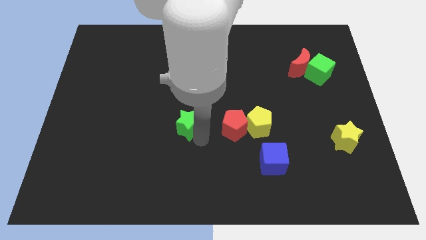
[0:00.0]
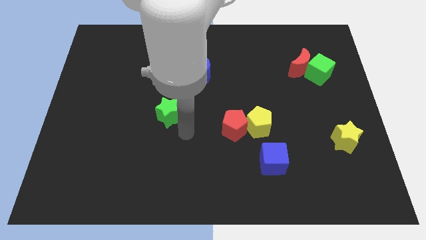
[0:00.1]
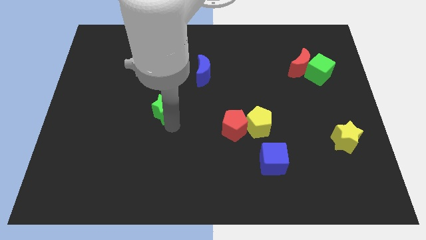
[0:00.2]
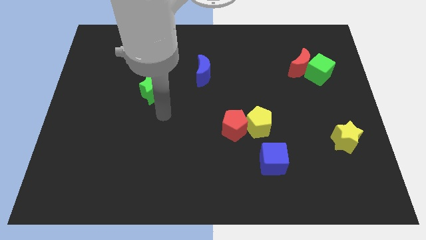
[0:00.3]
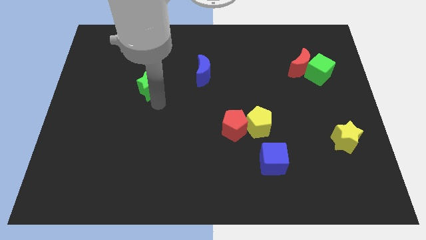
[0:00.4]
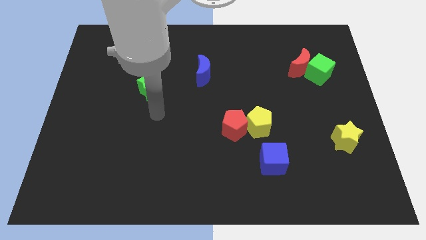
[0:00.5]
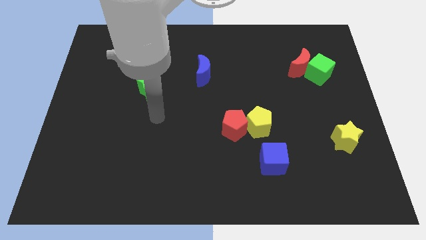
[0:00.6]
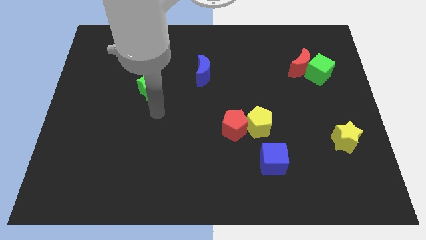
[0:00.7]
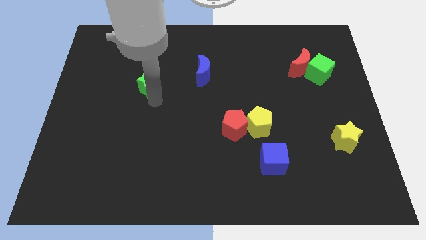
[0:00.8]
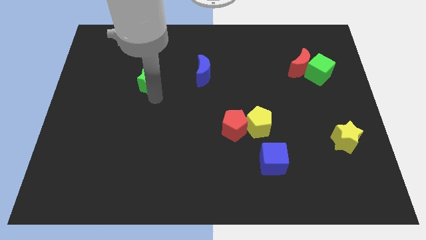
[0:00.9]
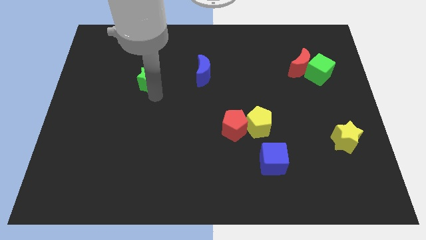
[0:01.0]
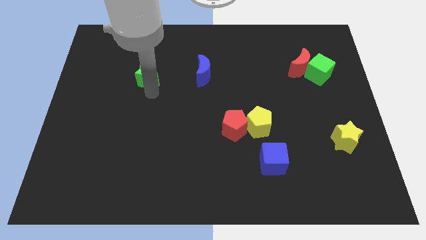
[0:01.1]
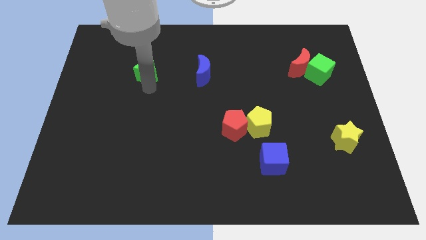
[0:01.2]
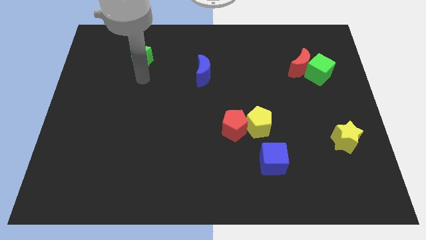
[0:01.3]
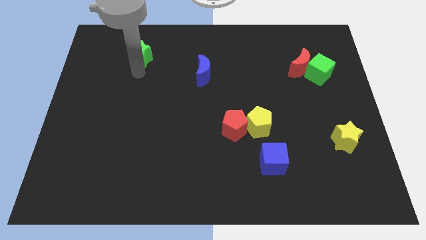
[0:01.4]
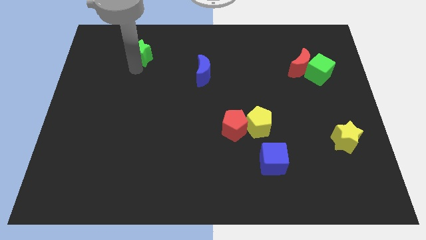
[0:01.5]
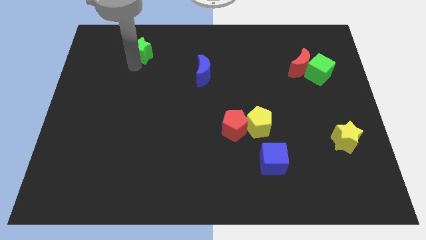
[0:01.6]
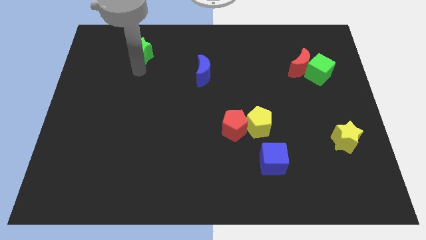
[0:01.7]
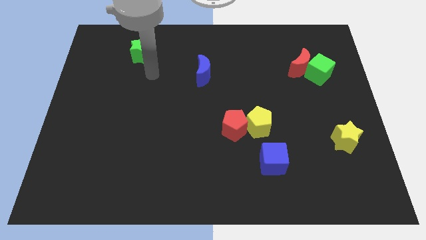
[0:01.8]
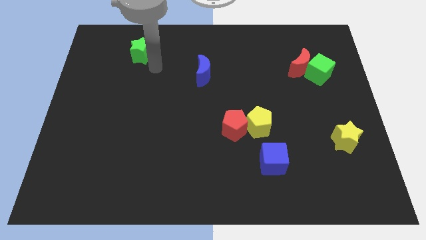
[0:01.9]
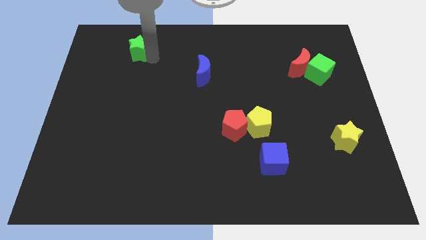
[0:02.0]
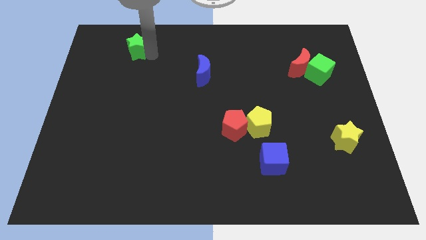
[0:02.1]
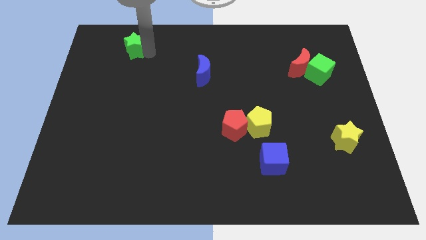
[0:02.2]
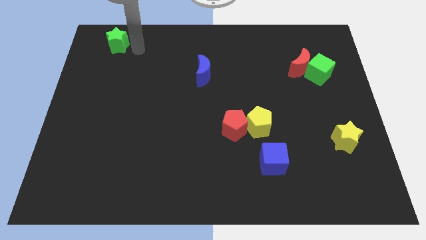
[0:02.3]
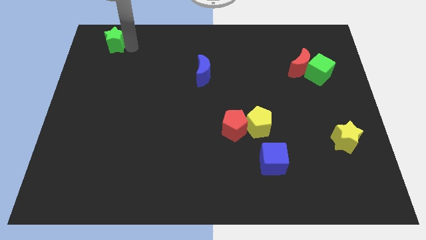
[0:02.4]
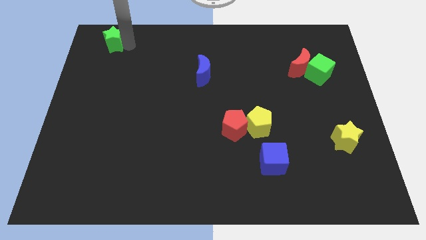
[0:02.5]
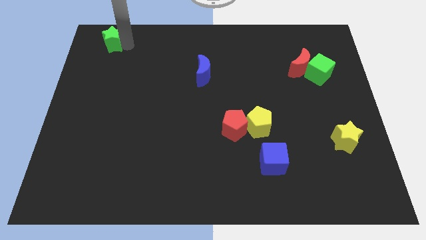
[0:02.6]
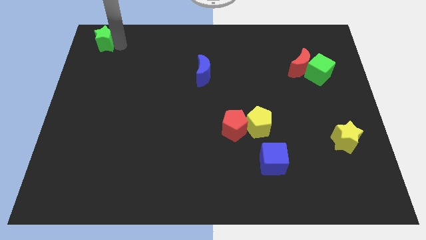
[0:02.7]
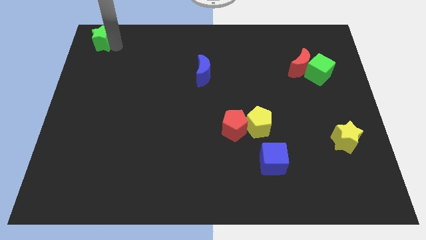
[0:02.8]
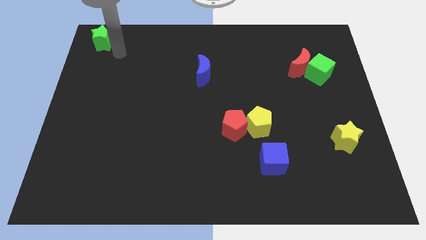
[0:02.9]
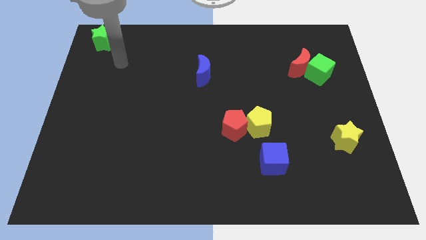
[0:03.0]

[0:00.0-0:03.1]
push the green star to the top left corner of the board

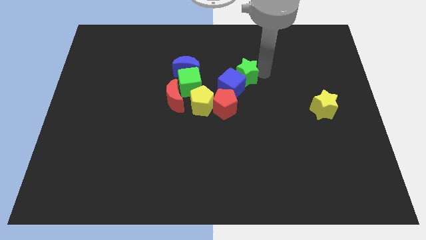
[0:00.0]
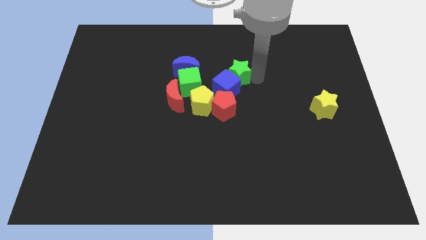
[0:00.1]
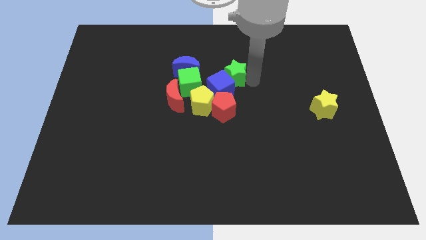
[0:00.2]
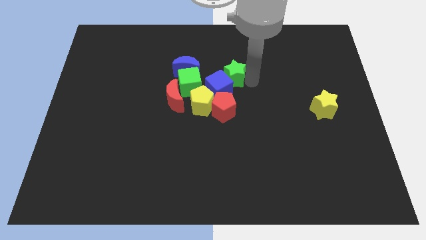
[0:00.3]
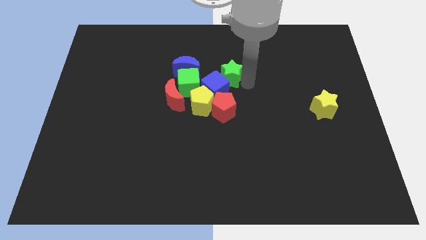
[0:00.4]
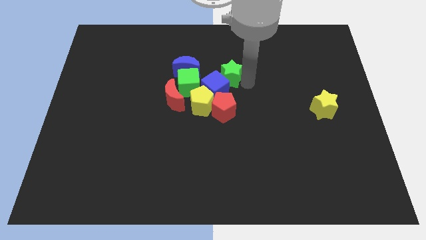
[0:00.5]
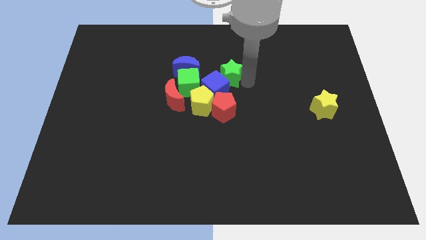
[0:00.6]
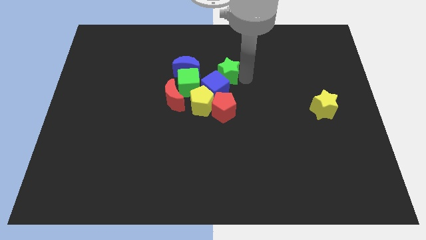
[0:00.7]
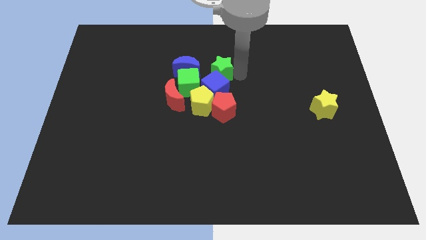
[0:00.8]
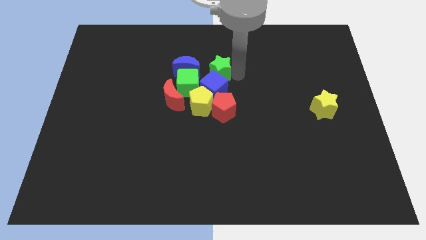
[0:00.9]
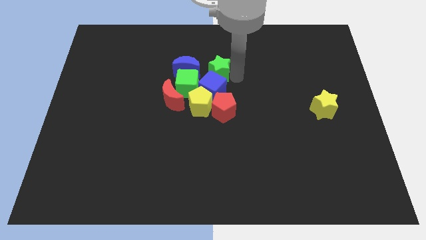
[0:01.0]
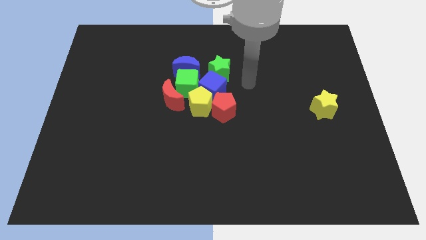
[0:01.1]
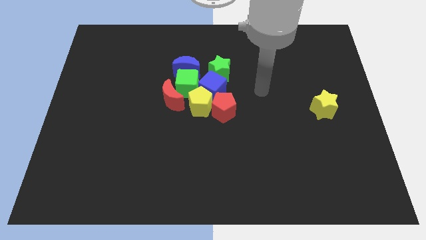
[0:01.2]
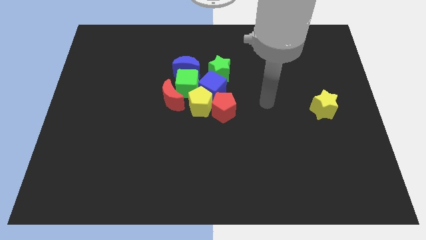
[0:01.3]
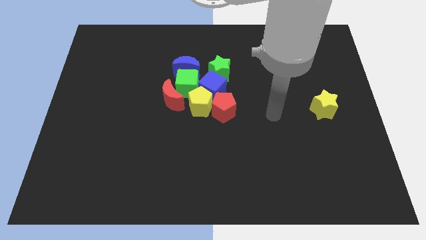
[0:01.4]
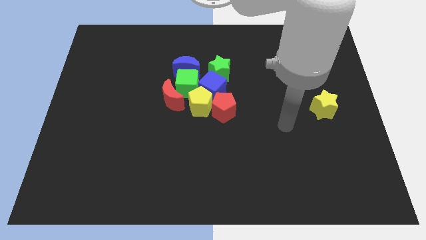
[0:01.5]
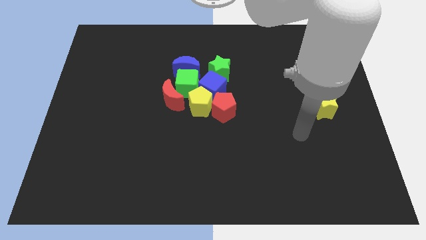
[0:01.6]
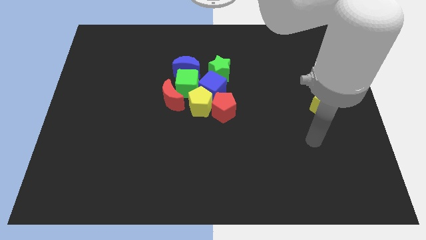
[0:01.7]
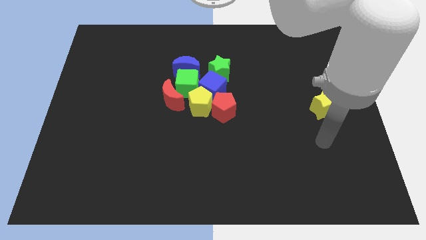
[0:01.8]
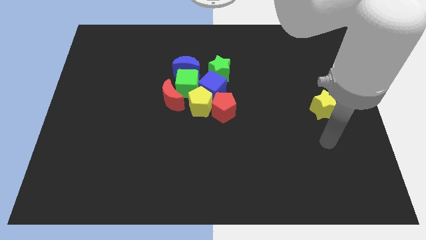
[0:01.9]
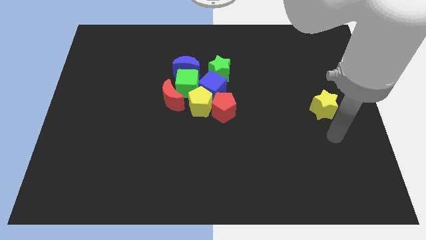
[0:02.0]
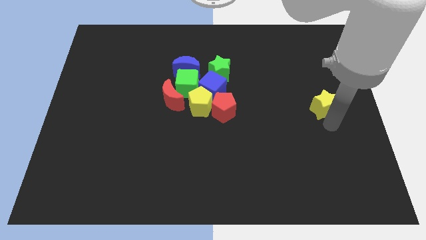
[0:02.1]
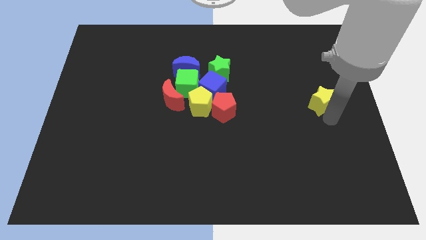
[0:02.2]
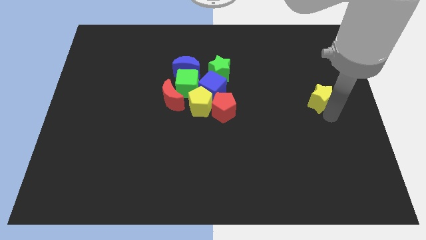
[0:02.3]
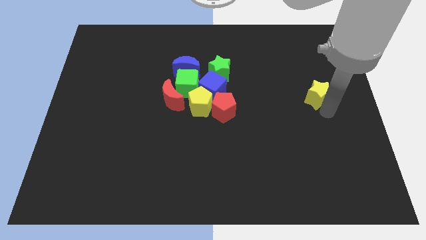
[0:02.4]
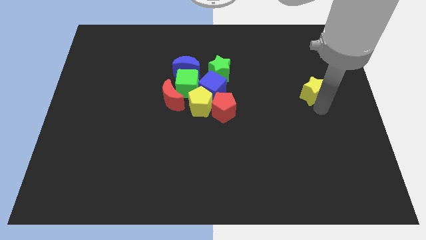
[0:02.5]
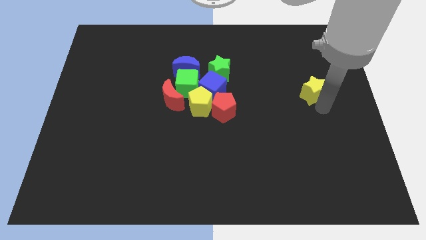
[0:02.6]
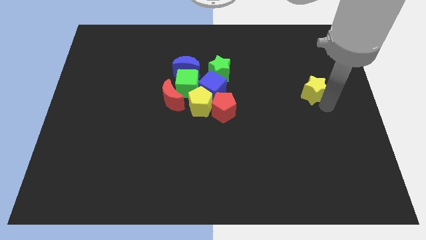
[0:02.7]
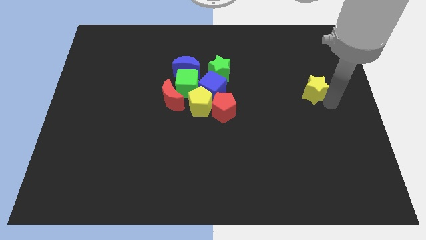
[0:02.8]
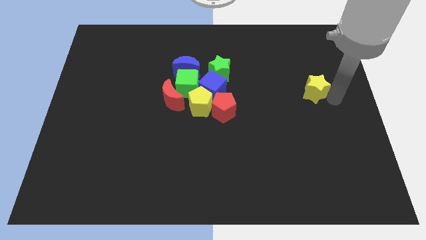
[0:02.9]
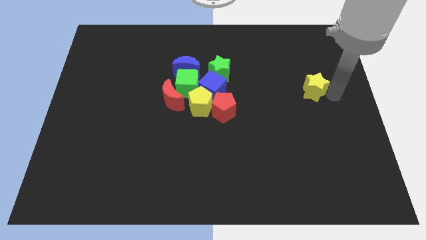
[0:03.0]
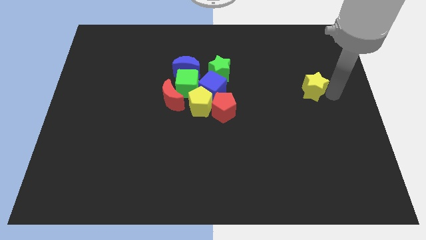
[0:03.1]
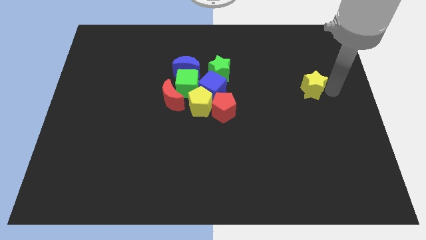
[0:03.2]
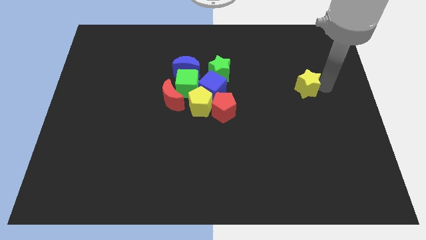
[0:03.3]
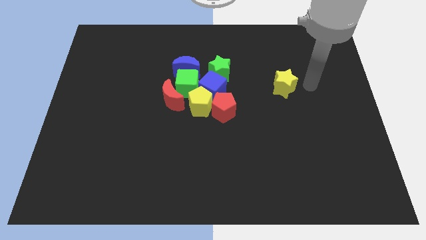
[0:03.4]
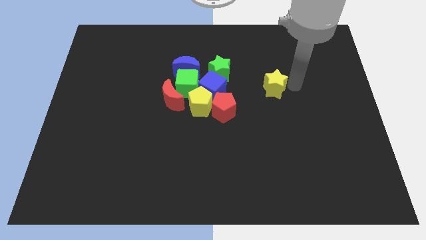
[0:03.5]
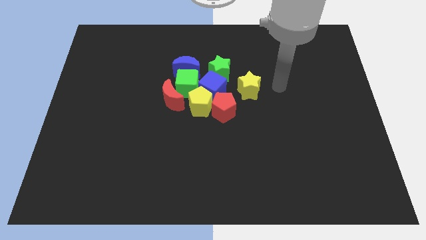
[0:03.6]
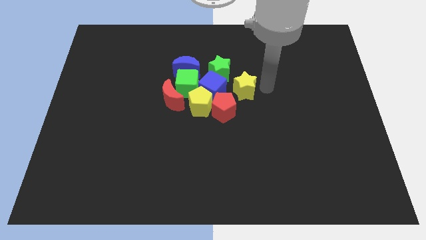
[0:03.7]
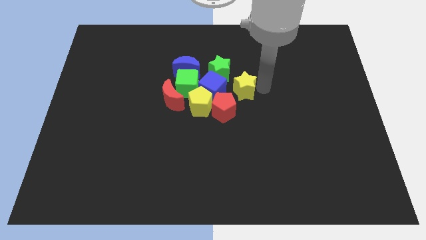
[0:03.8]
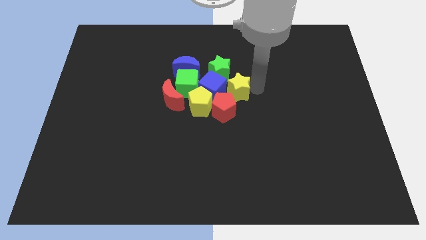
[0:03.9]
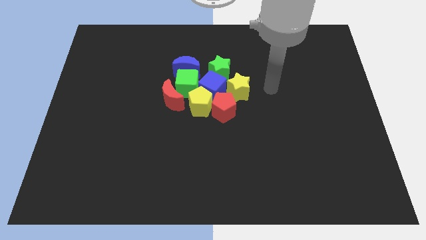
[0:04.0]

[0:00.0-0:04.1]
push the yellow star into the group of blocks

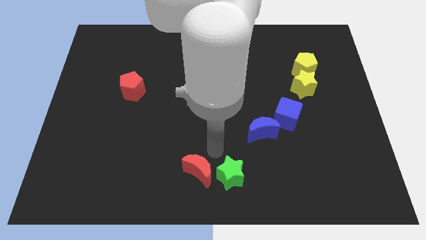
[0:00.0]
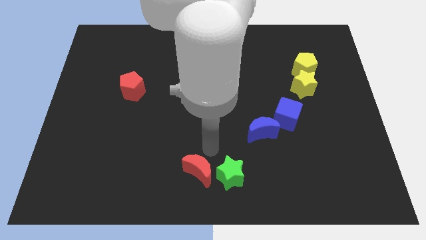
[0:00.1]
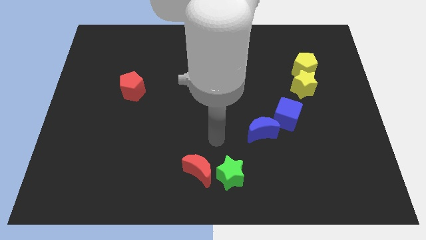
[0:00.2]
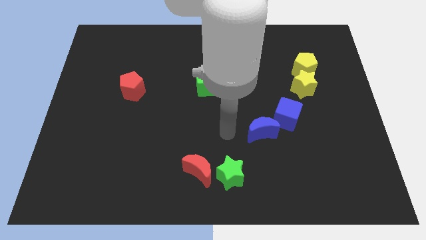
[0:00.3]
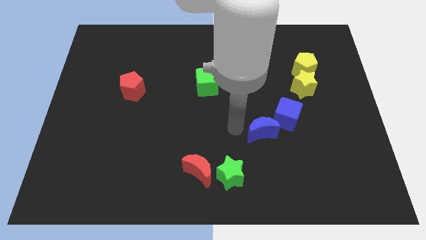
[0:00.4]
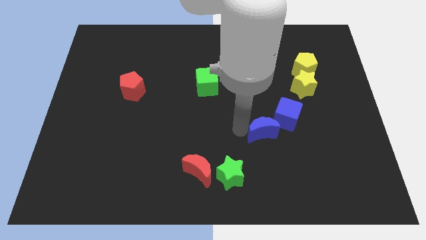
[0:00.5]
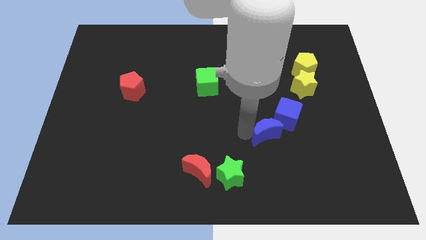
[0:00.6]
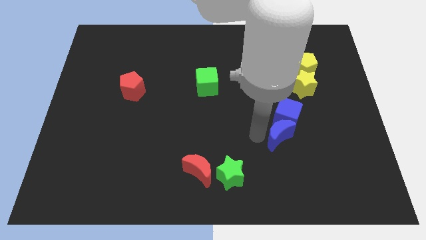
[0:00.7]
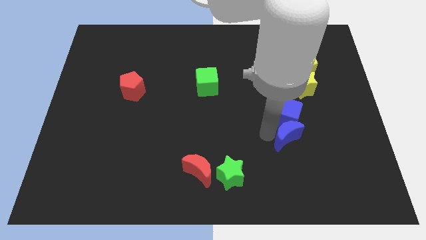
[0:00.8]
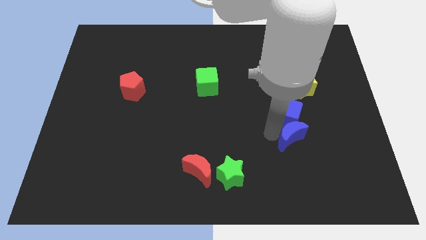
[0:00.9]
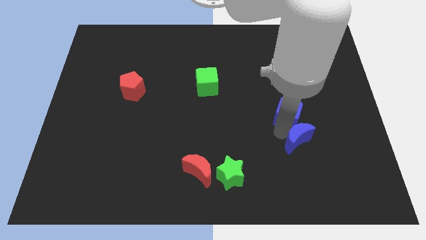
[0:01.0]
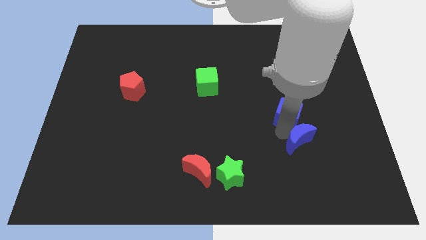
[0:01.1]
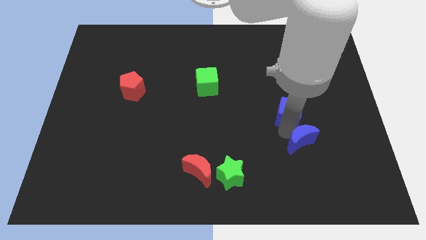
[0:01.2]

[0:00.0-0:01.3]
move blue moon to the bottom of blue cube

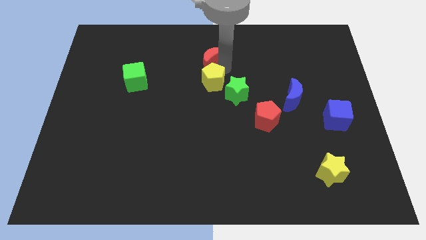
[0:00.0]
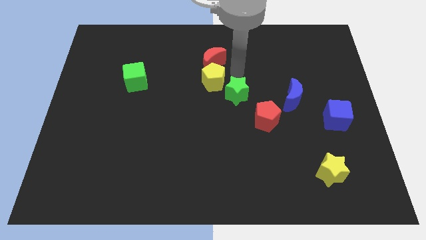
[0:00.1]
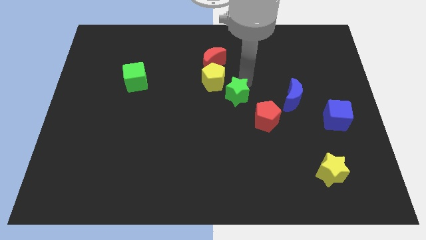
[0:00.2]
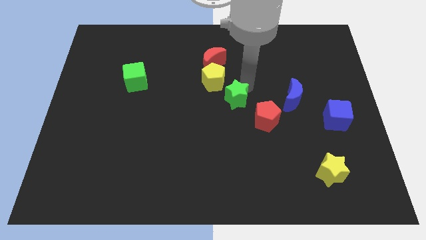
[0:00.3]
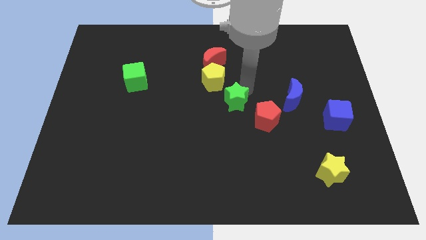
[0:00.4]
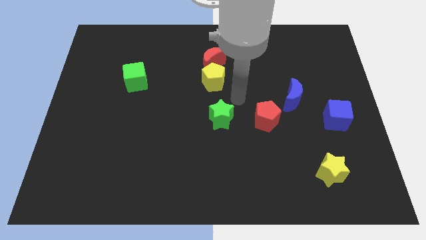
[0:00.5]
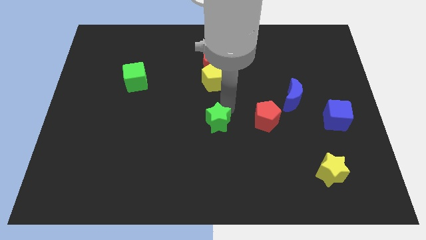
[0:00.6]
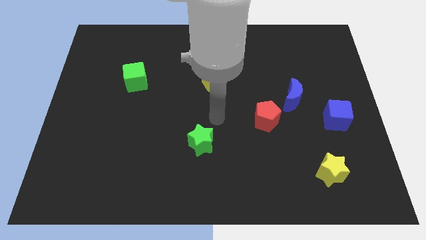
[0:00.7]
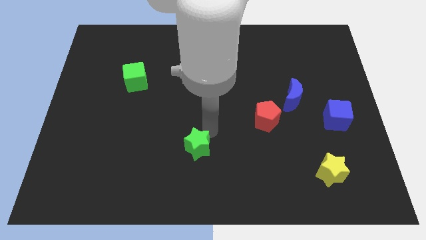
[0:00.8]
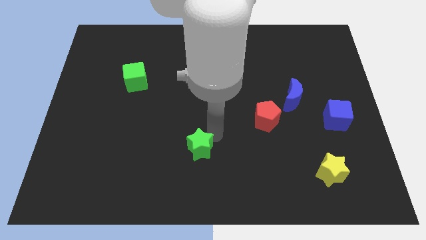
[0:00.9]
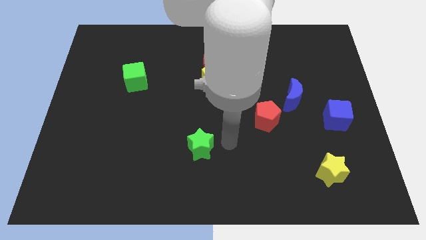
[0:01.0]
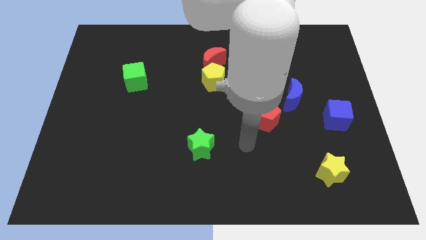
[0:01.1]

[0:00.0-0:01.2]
separate the green star from the yellow pentagon
